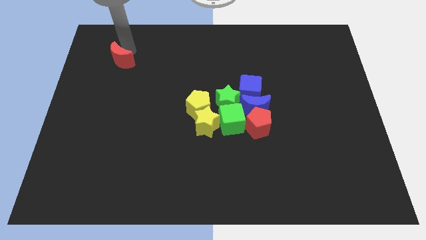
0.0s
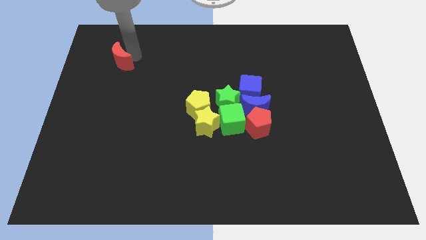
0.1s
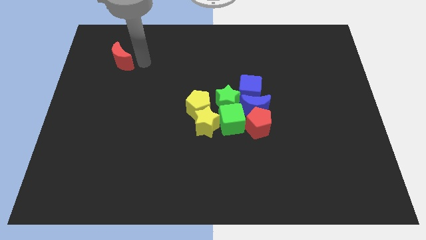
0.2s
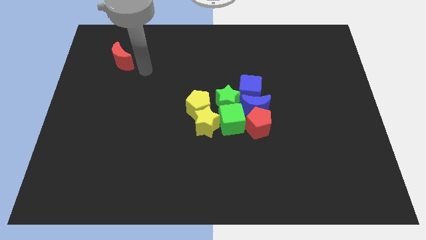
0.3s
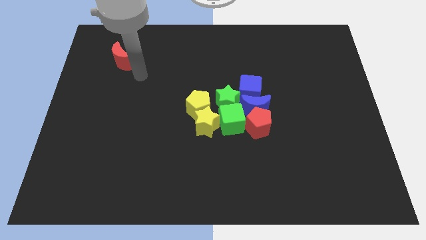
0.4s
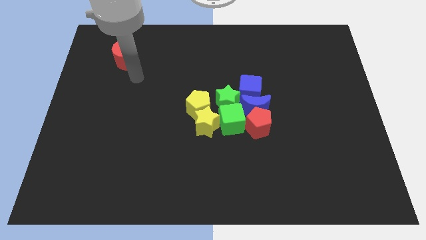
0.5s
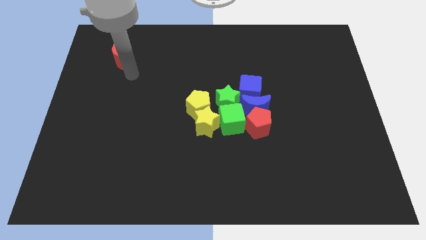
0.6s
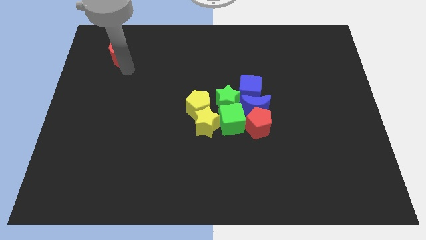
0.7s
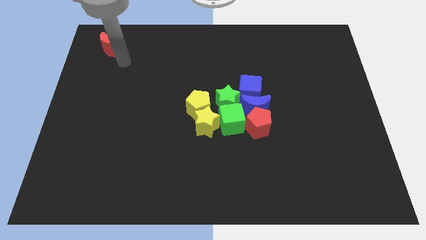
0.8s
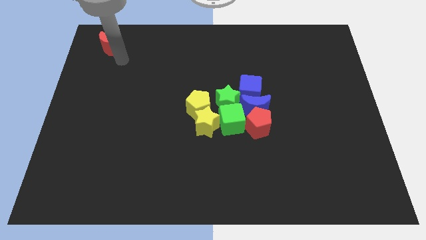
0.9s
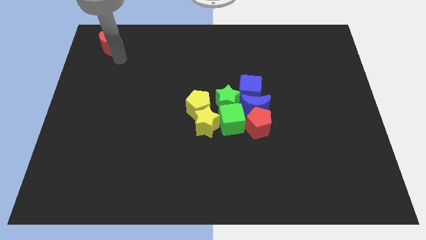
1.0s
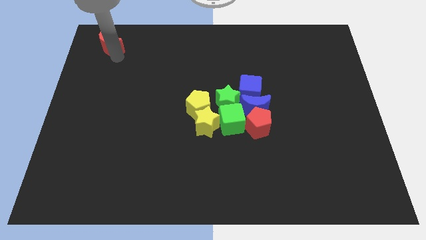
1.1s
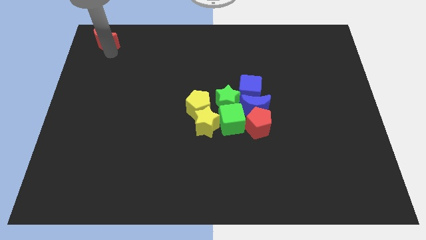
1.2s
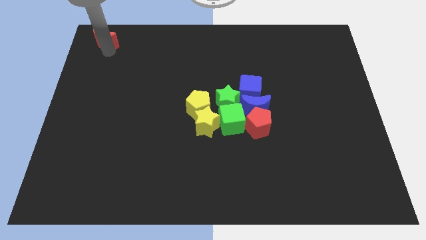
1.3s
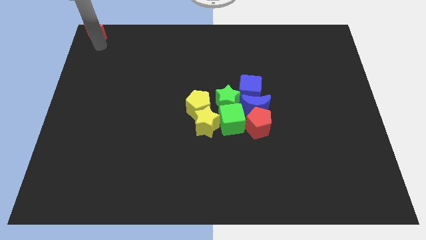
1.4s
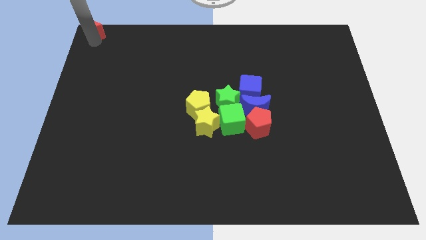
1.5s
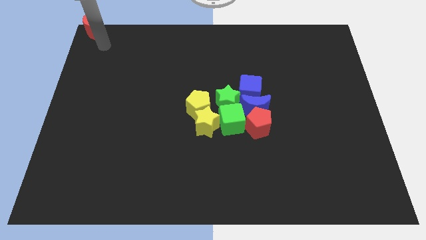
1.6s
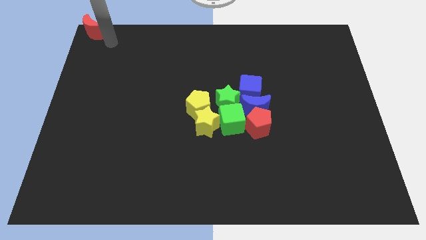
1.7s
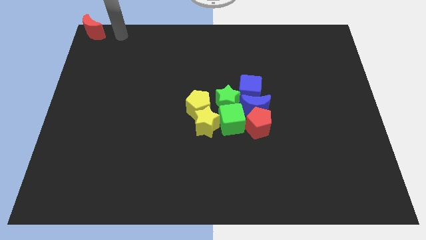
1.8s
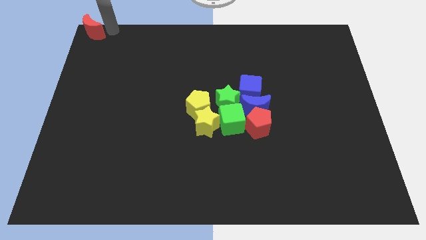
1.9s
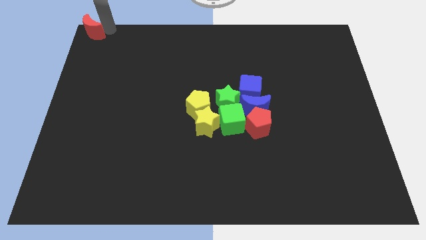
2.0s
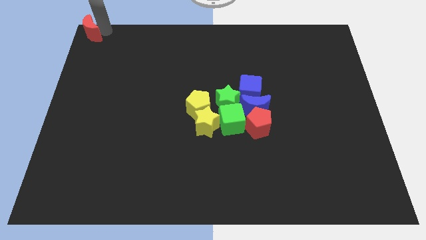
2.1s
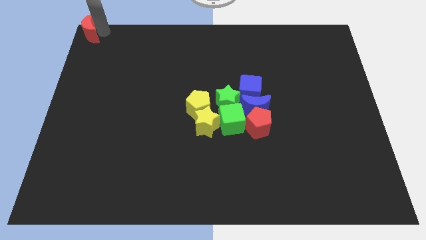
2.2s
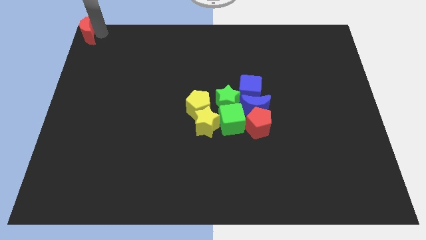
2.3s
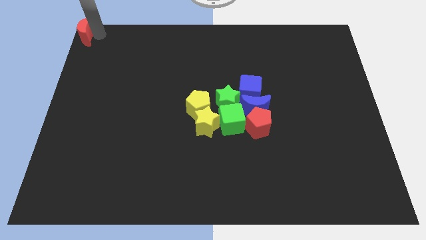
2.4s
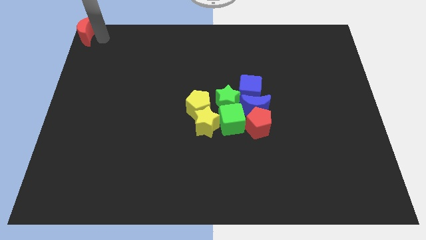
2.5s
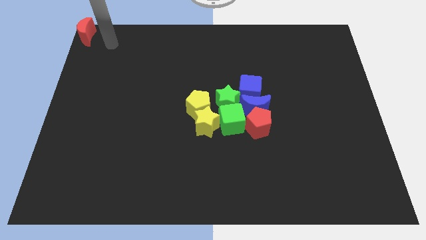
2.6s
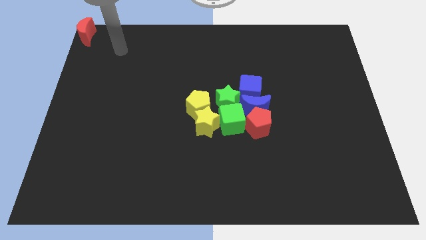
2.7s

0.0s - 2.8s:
place the red moon top left corner of the board

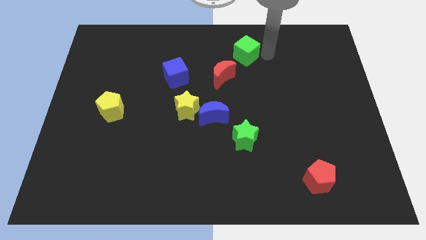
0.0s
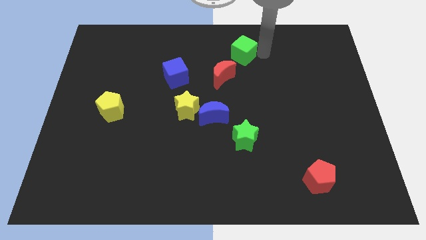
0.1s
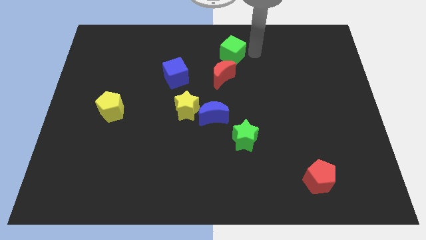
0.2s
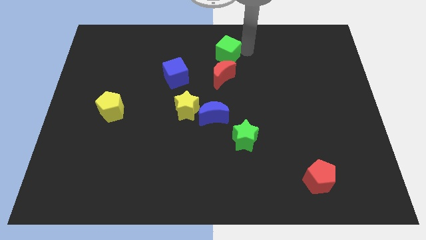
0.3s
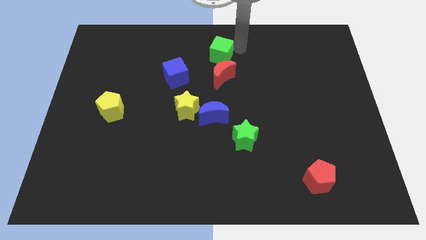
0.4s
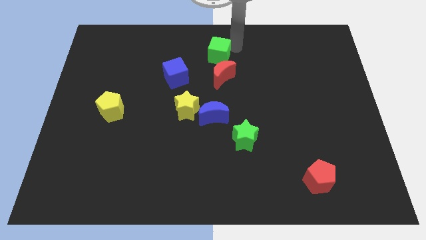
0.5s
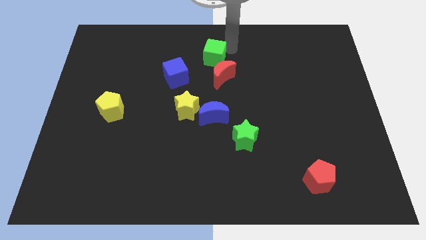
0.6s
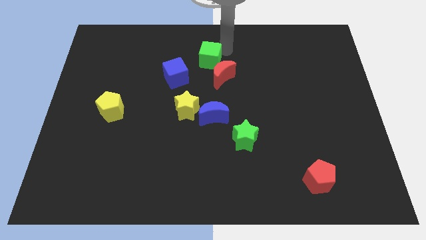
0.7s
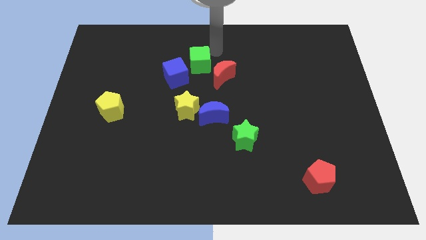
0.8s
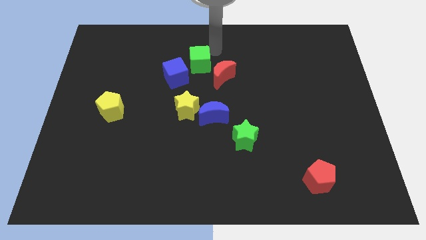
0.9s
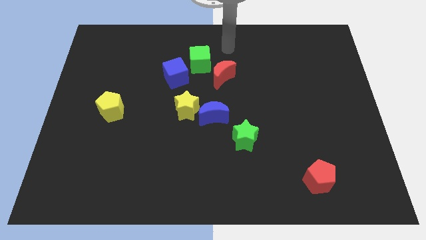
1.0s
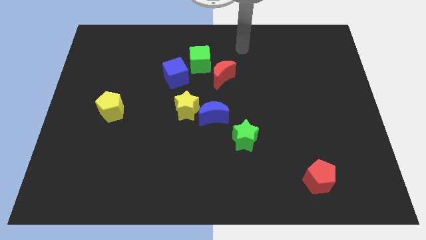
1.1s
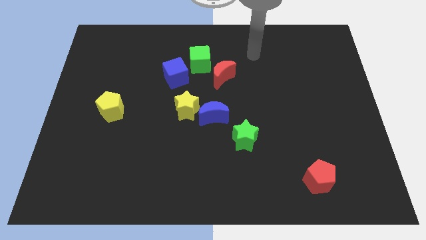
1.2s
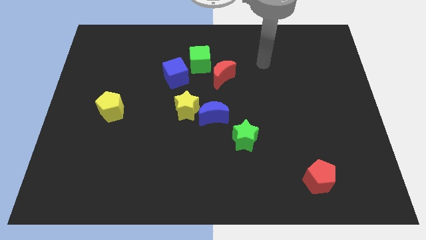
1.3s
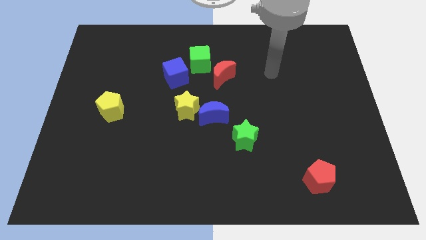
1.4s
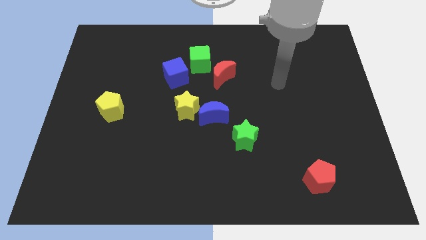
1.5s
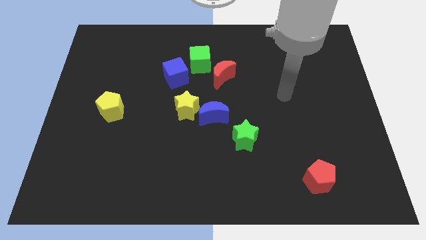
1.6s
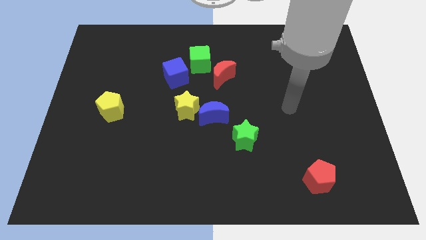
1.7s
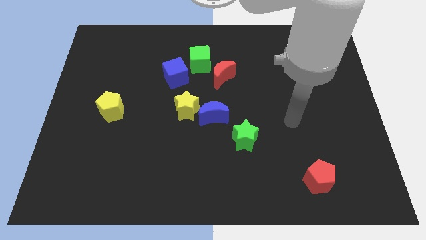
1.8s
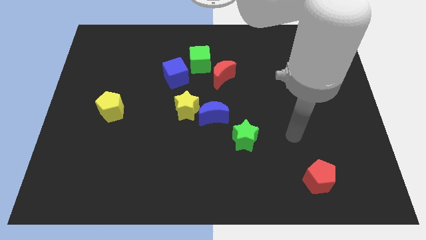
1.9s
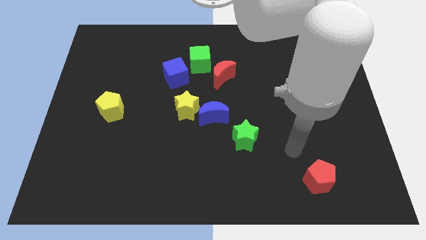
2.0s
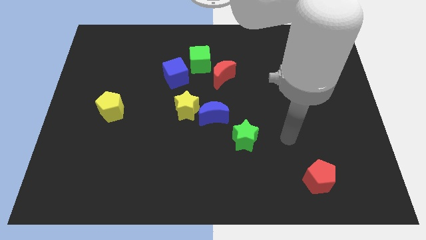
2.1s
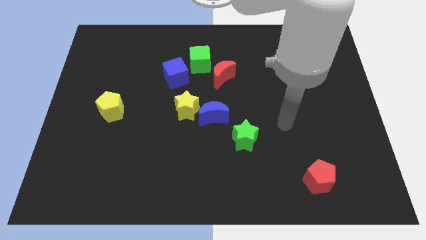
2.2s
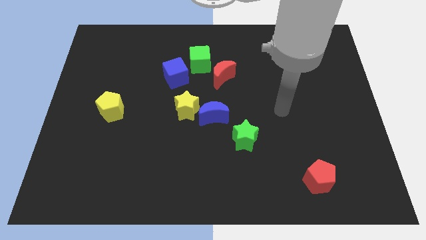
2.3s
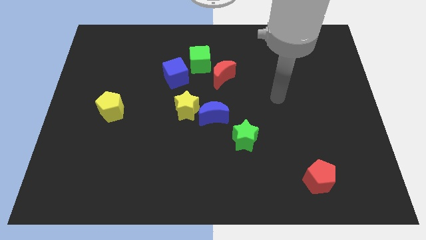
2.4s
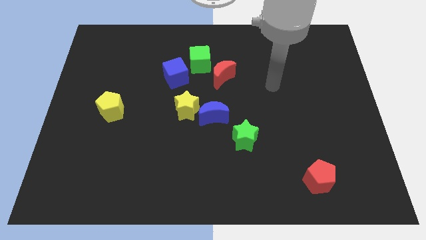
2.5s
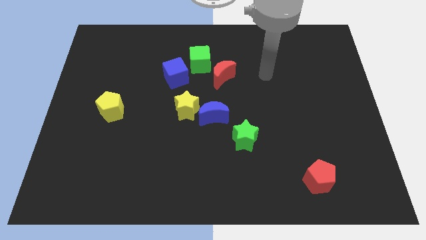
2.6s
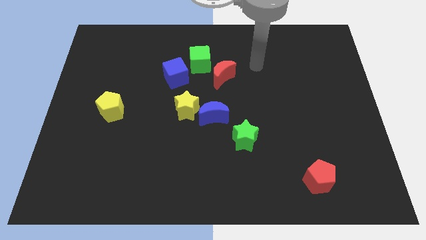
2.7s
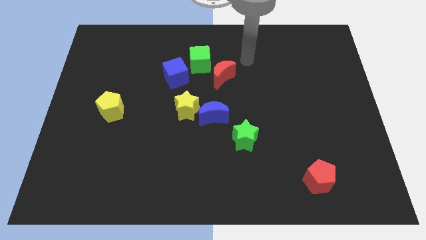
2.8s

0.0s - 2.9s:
push the green cube close to the blue cube

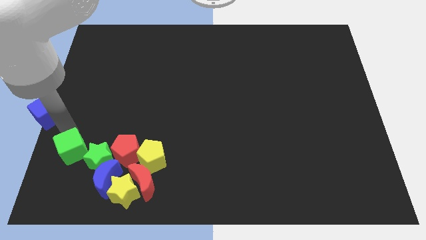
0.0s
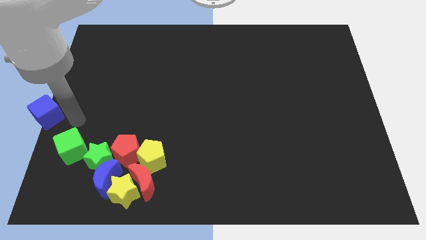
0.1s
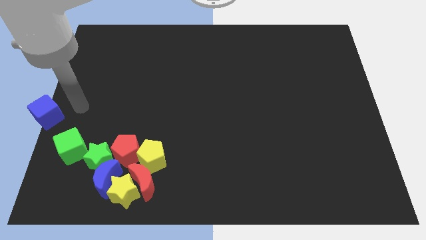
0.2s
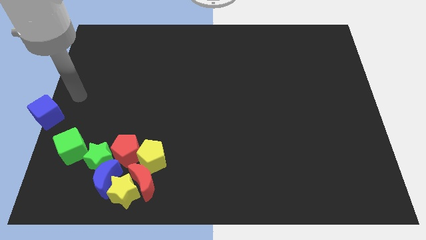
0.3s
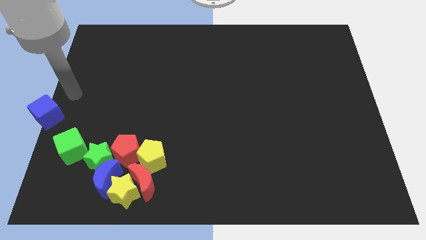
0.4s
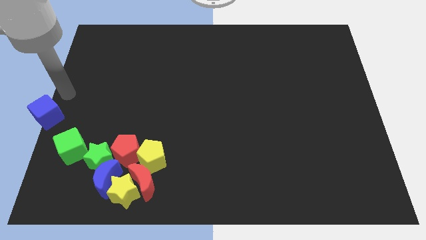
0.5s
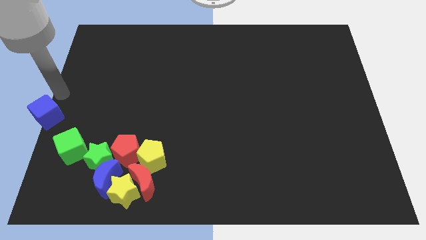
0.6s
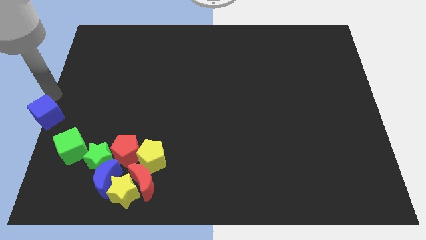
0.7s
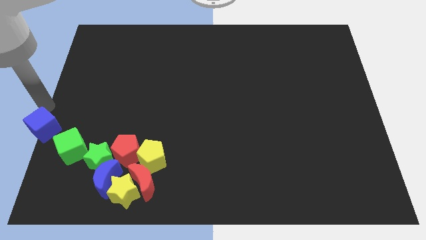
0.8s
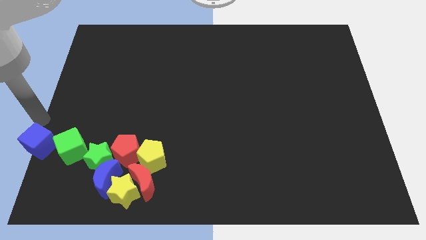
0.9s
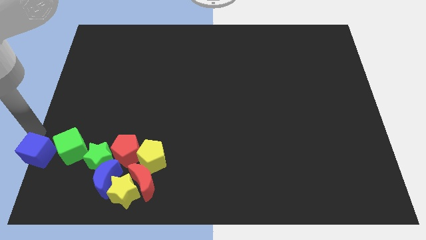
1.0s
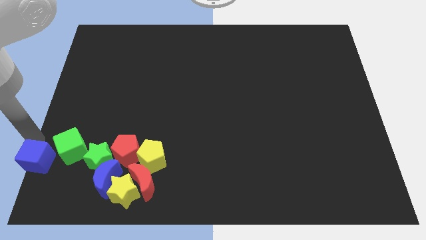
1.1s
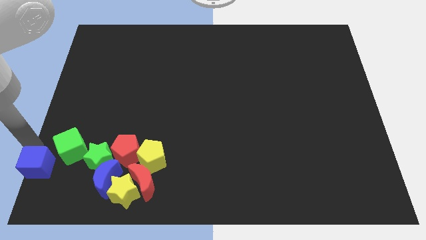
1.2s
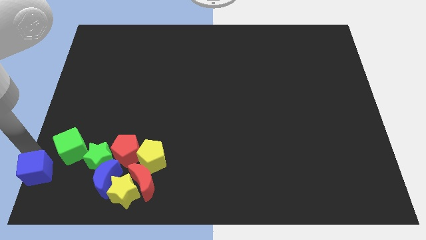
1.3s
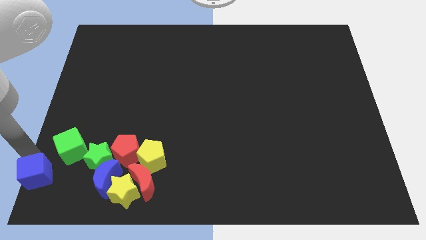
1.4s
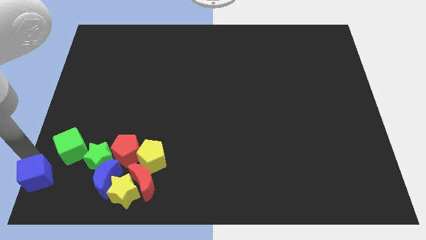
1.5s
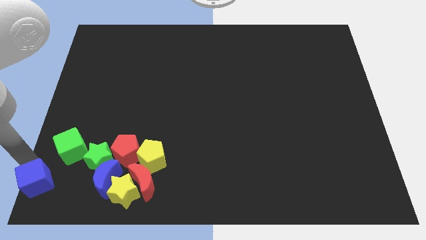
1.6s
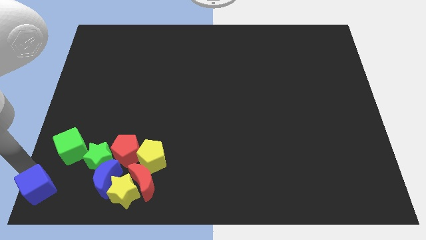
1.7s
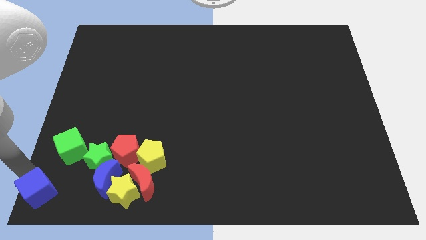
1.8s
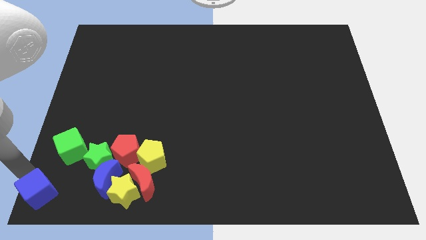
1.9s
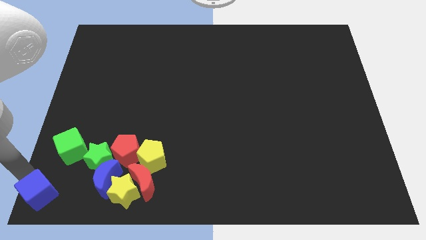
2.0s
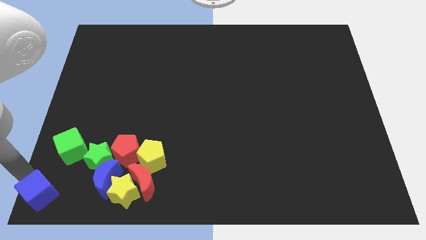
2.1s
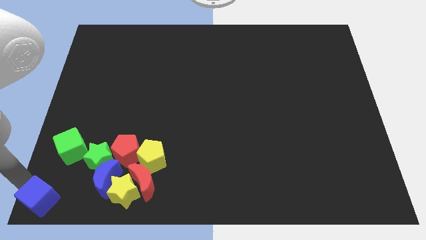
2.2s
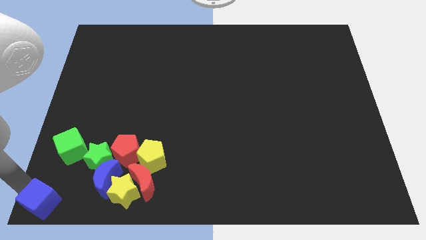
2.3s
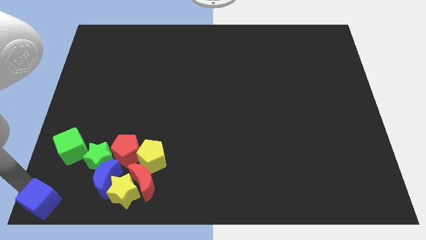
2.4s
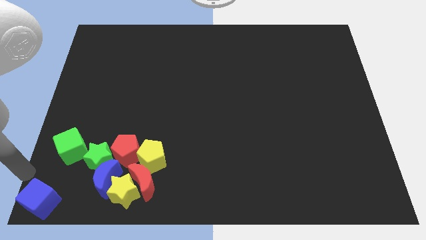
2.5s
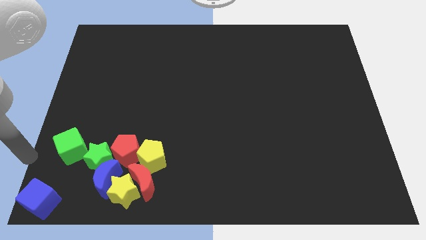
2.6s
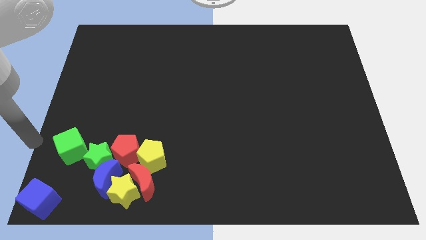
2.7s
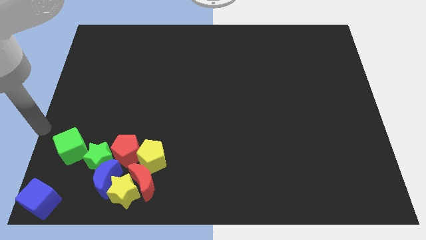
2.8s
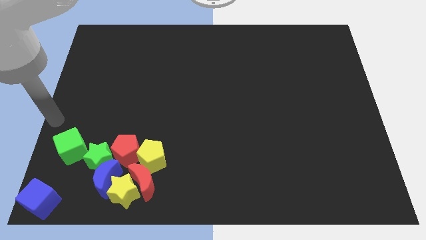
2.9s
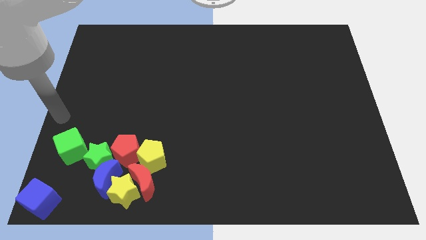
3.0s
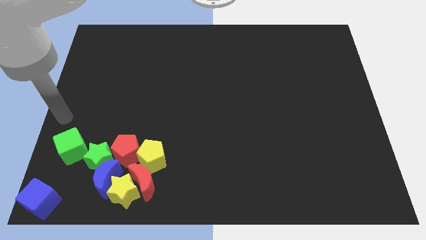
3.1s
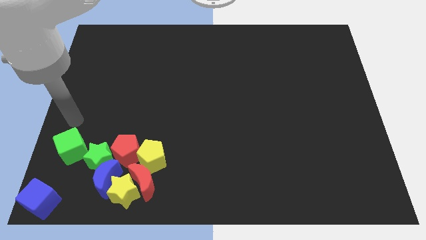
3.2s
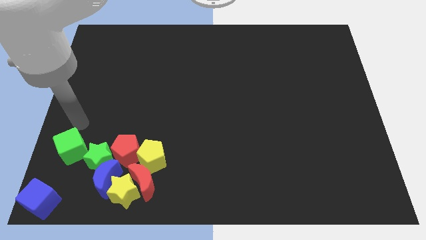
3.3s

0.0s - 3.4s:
put the blue cube at the bottom left corner of the board
